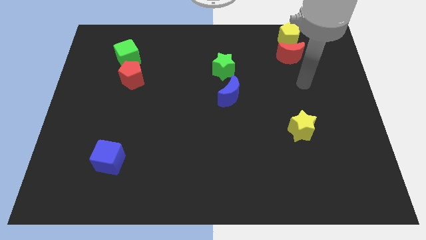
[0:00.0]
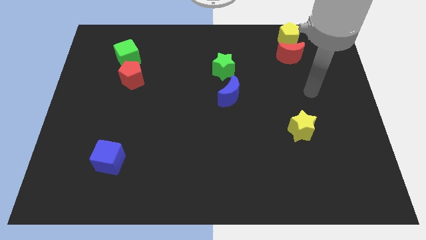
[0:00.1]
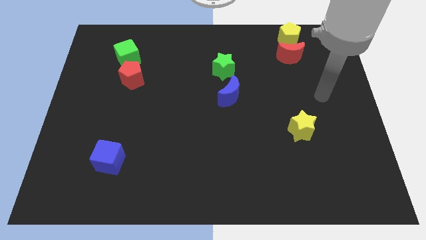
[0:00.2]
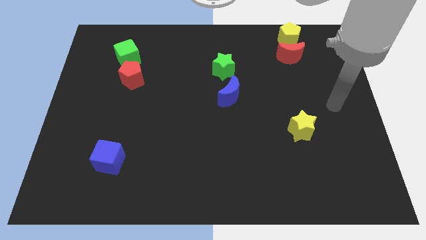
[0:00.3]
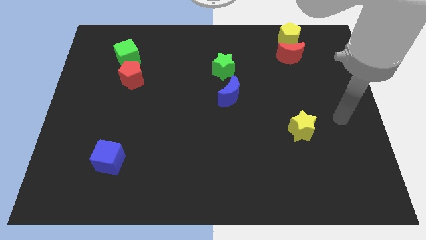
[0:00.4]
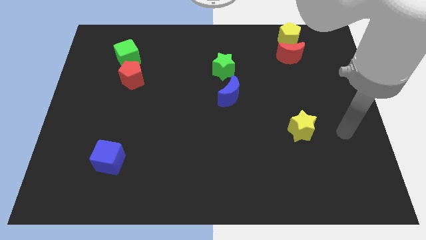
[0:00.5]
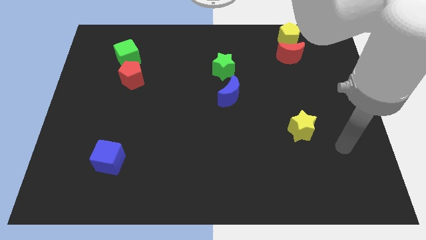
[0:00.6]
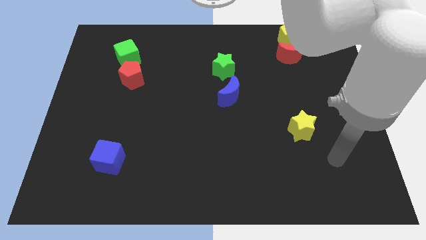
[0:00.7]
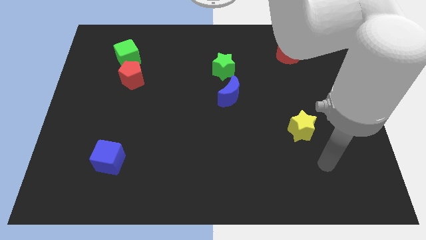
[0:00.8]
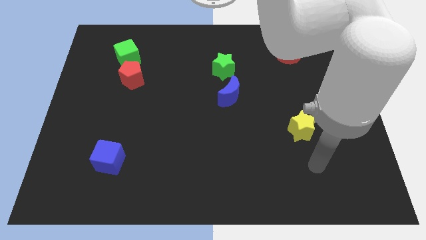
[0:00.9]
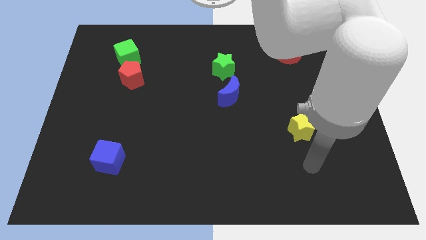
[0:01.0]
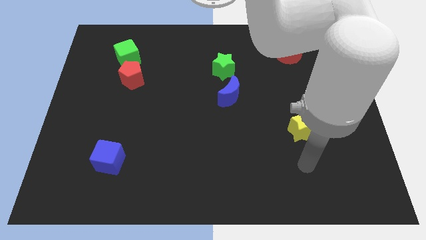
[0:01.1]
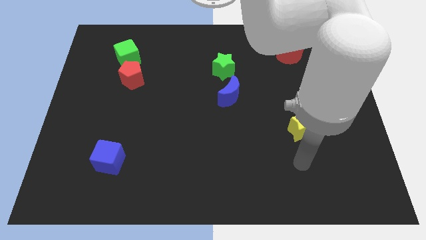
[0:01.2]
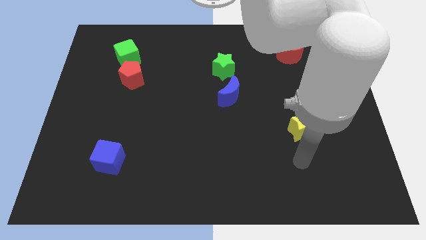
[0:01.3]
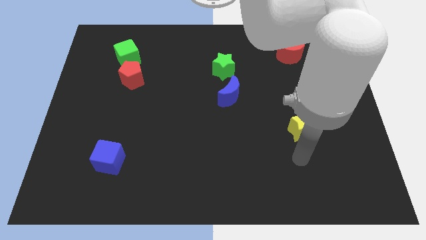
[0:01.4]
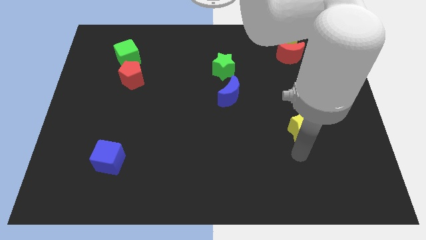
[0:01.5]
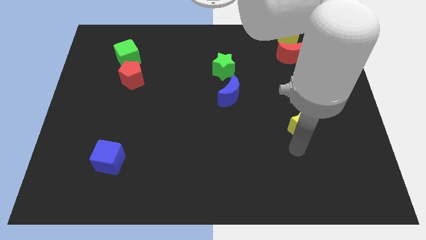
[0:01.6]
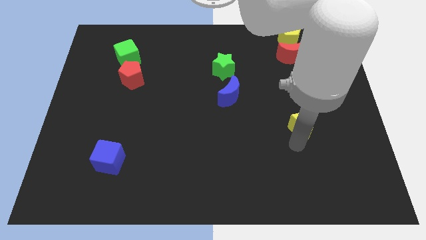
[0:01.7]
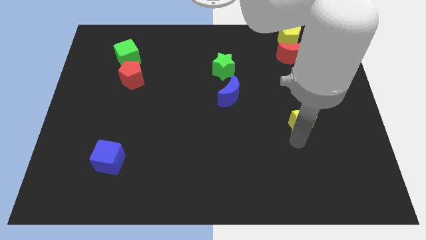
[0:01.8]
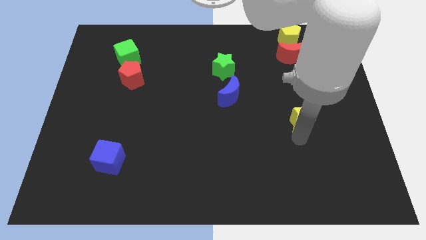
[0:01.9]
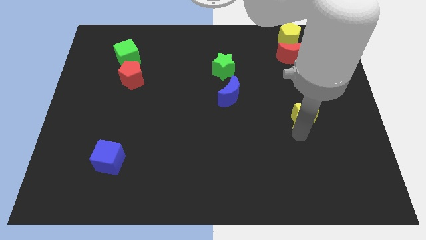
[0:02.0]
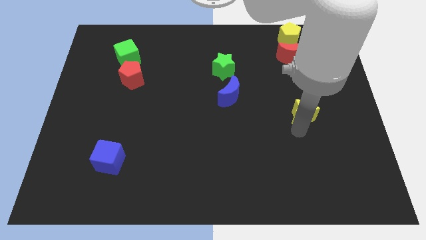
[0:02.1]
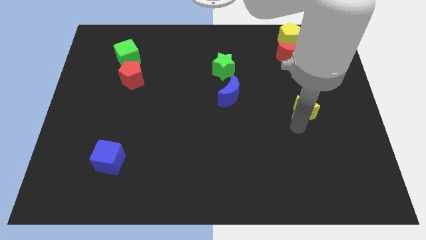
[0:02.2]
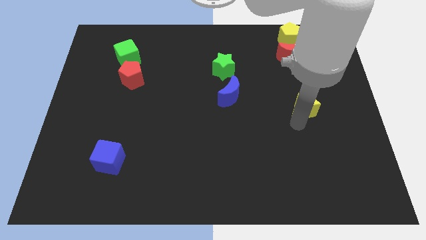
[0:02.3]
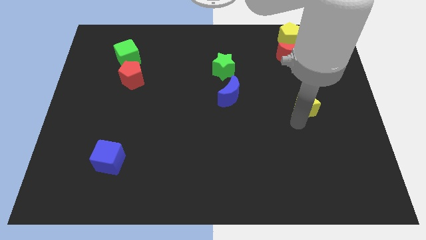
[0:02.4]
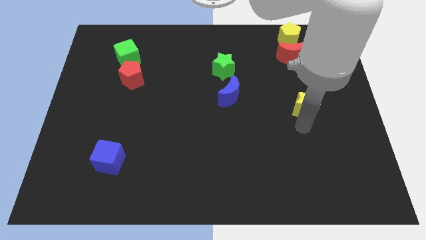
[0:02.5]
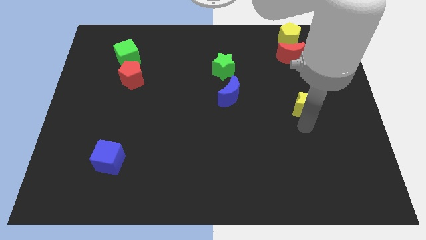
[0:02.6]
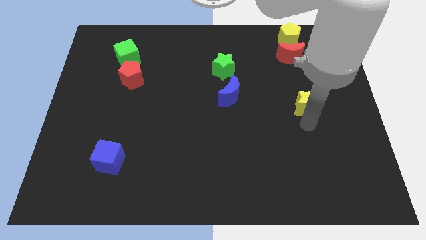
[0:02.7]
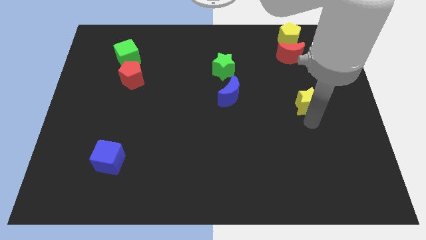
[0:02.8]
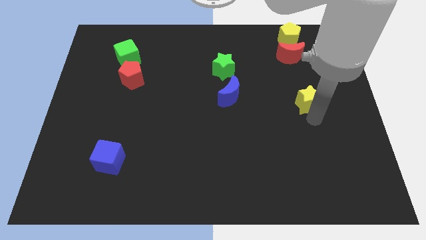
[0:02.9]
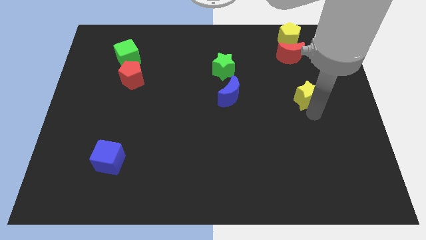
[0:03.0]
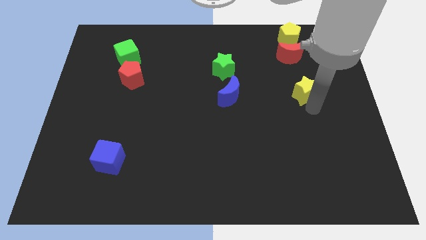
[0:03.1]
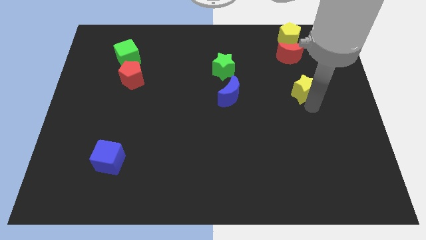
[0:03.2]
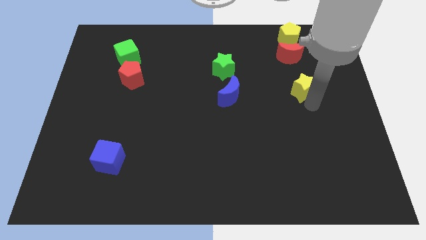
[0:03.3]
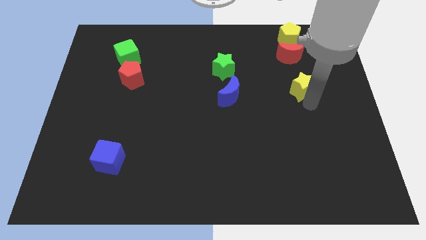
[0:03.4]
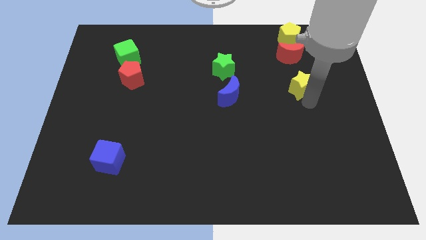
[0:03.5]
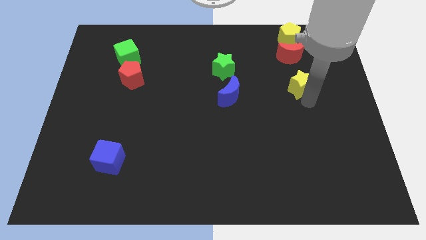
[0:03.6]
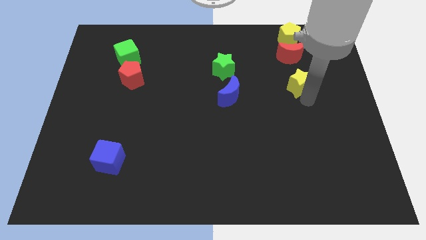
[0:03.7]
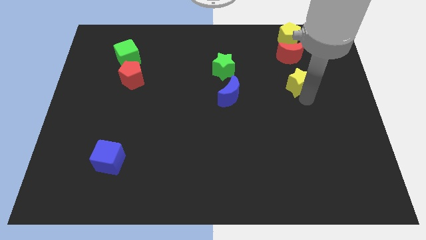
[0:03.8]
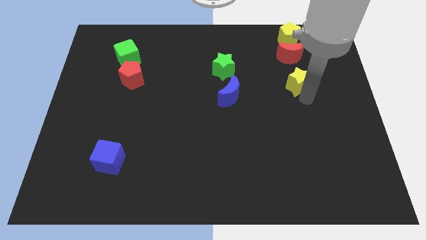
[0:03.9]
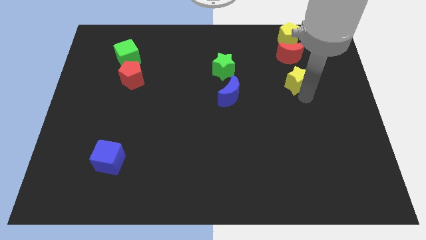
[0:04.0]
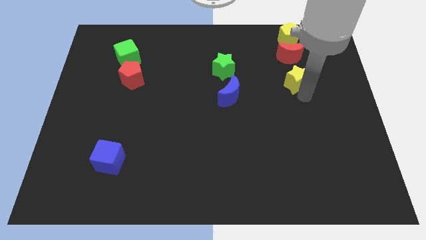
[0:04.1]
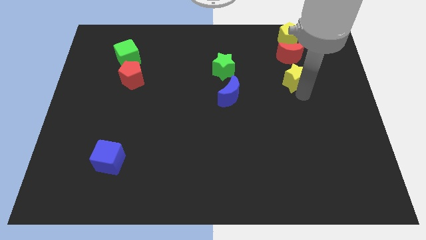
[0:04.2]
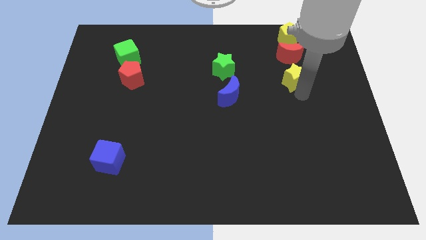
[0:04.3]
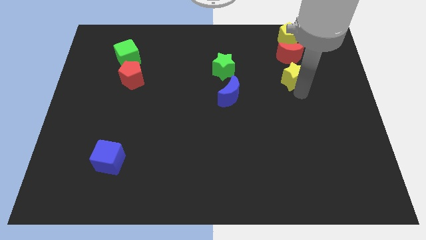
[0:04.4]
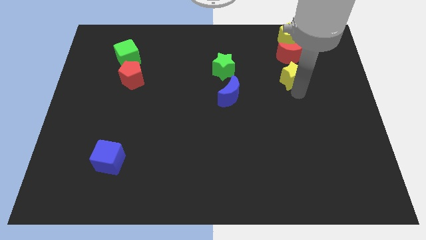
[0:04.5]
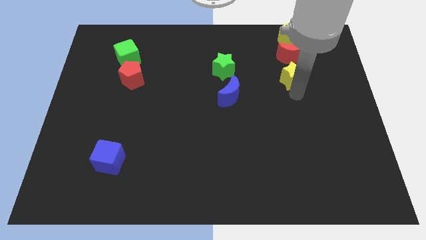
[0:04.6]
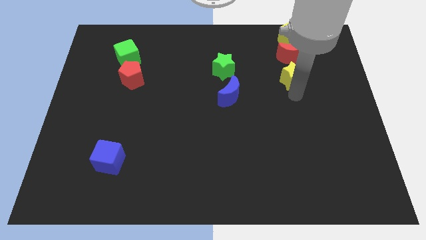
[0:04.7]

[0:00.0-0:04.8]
move the yellow star below the red crescent

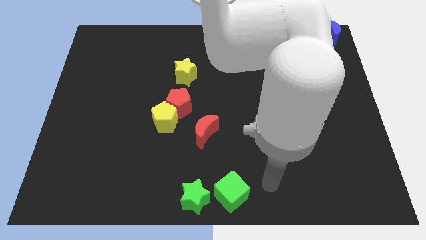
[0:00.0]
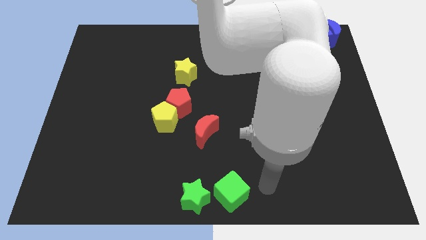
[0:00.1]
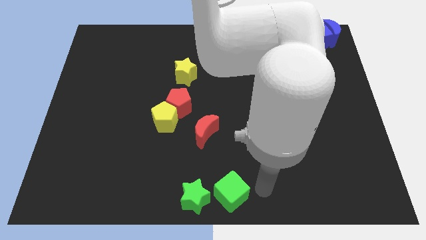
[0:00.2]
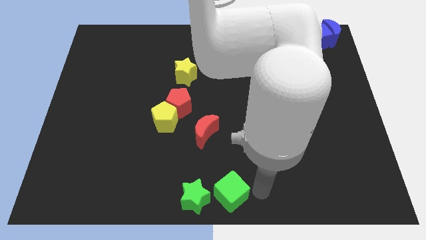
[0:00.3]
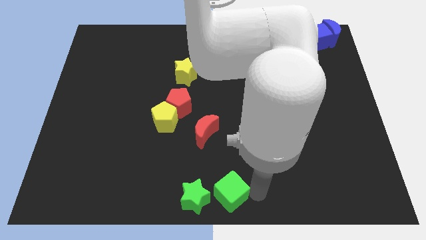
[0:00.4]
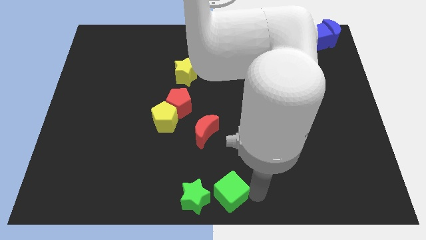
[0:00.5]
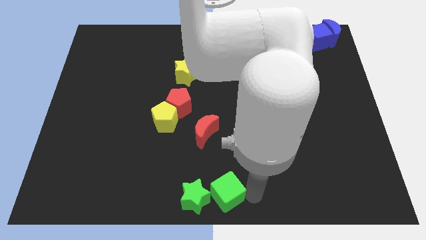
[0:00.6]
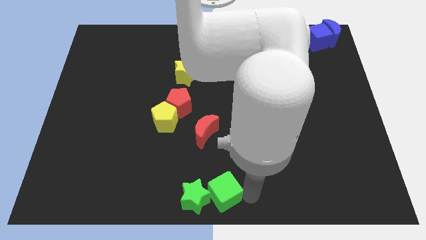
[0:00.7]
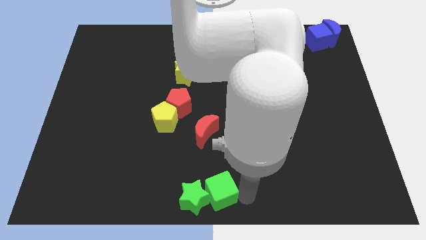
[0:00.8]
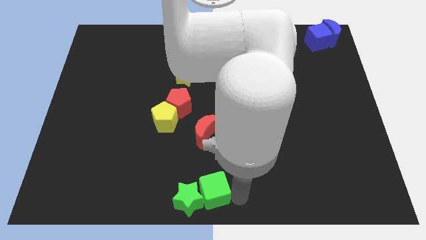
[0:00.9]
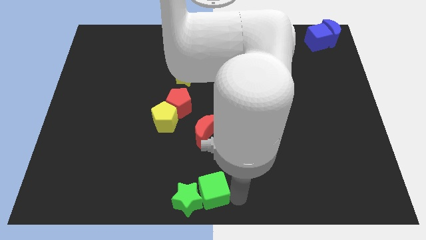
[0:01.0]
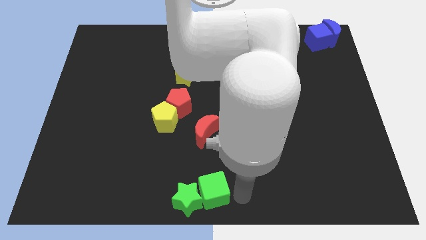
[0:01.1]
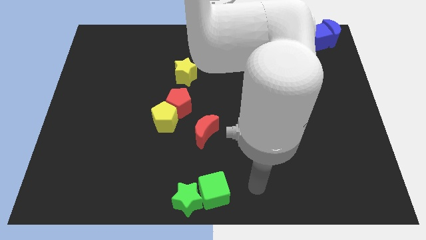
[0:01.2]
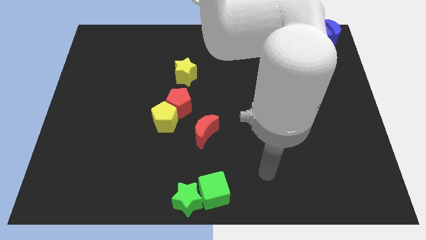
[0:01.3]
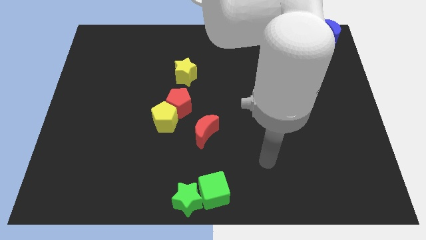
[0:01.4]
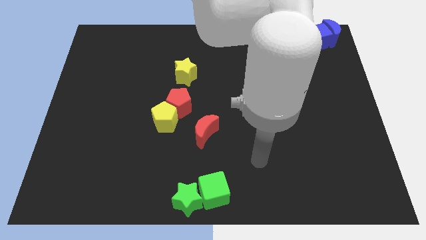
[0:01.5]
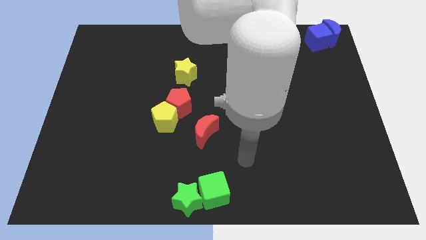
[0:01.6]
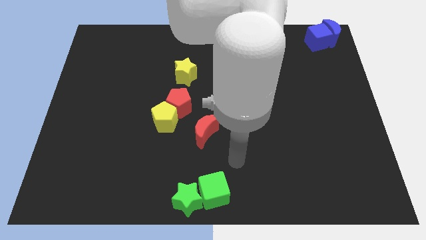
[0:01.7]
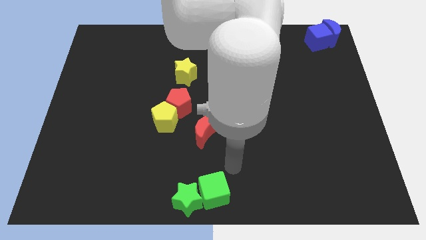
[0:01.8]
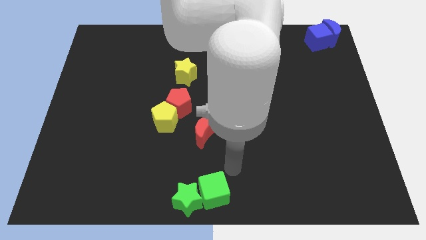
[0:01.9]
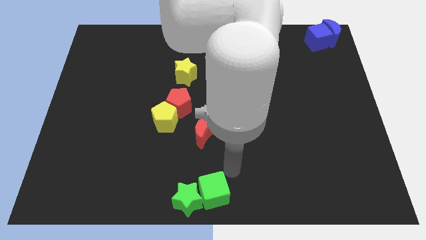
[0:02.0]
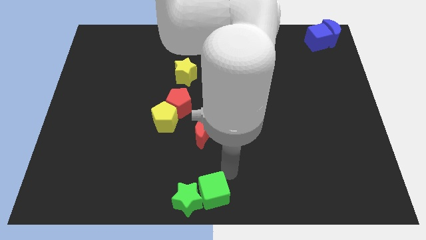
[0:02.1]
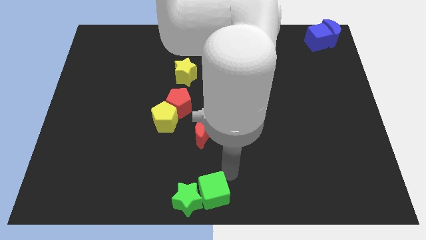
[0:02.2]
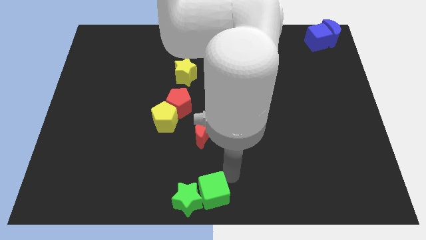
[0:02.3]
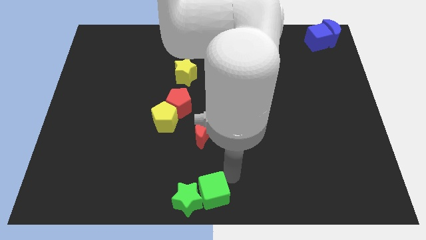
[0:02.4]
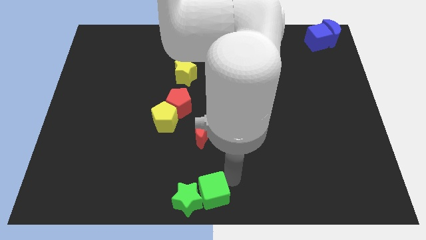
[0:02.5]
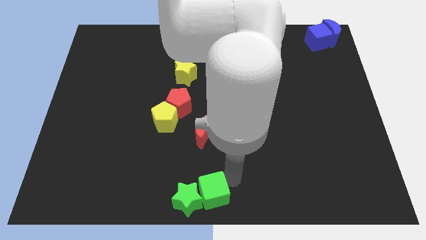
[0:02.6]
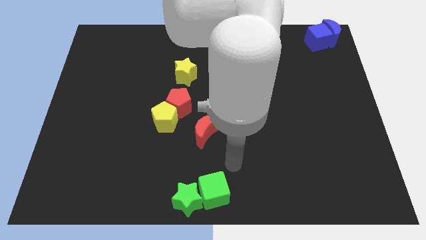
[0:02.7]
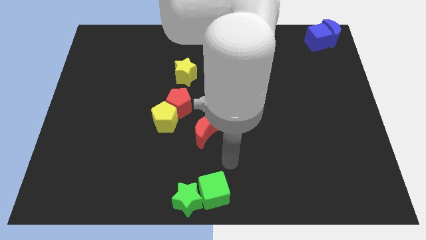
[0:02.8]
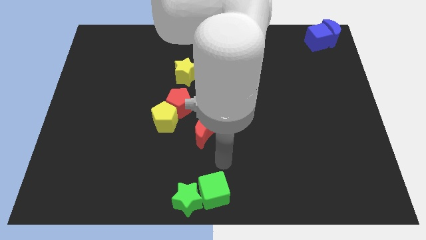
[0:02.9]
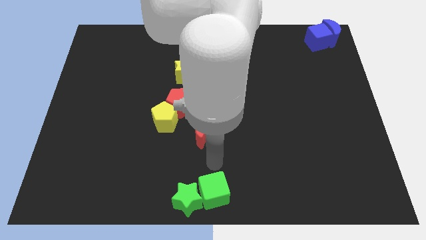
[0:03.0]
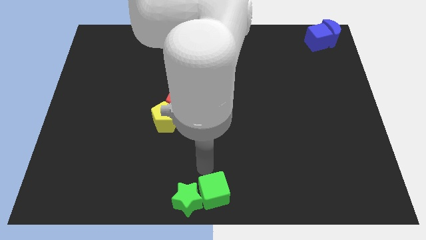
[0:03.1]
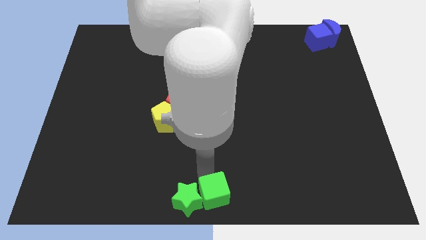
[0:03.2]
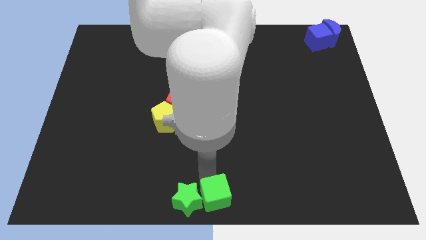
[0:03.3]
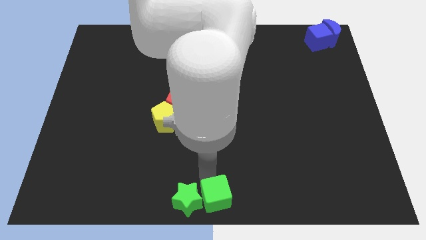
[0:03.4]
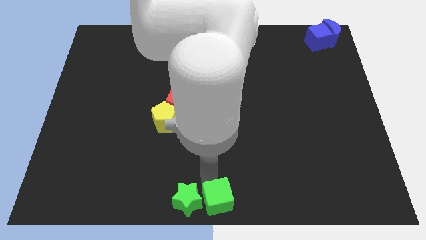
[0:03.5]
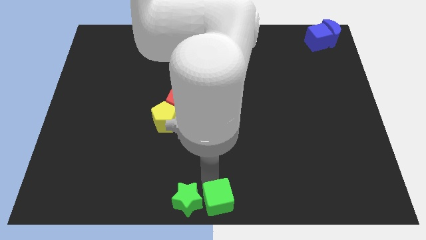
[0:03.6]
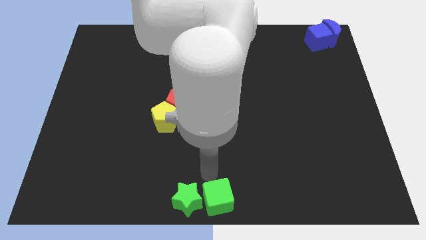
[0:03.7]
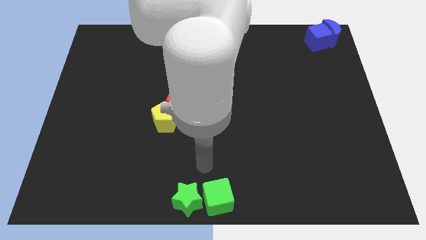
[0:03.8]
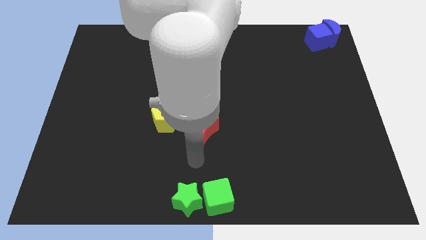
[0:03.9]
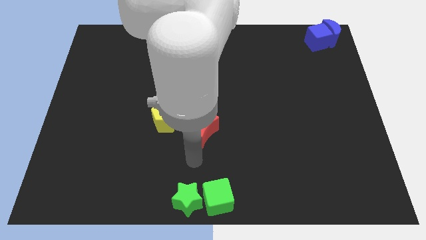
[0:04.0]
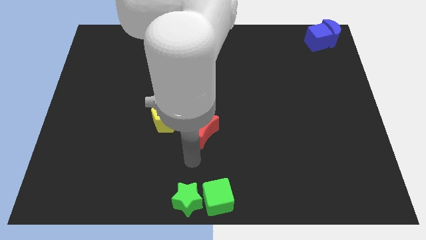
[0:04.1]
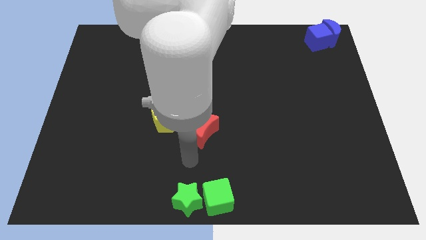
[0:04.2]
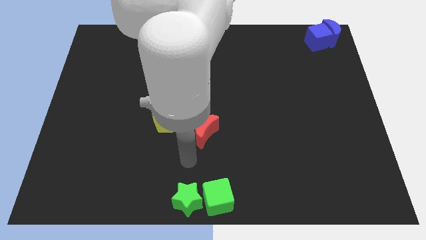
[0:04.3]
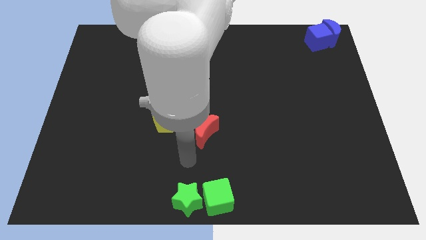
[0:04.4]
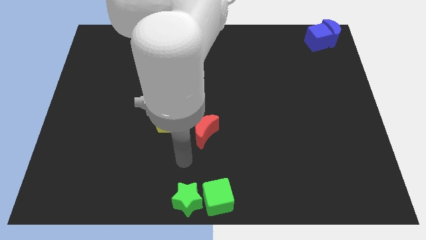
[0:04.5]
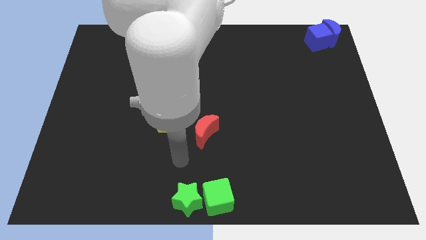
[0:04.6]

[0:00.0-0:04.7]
adjust the green cube at the bottom center of the board
